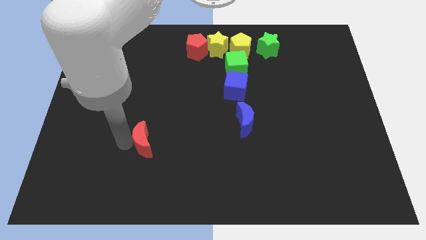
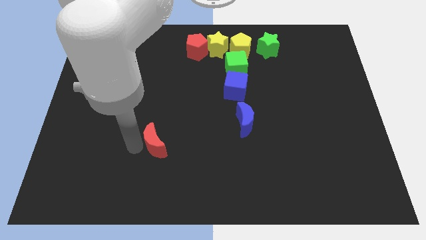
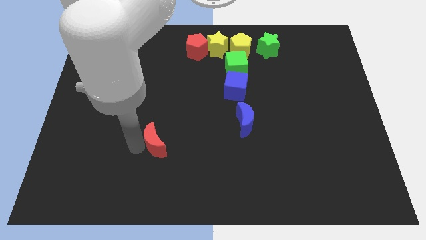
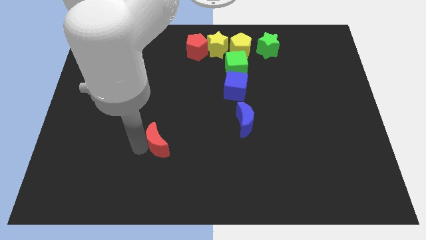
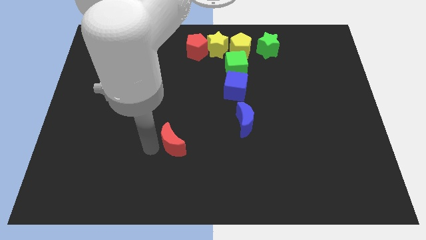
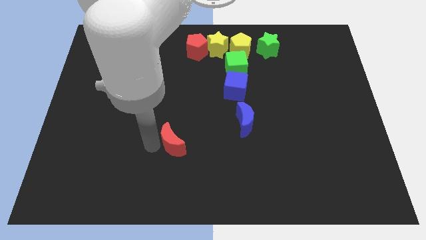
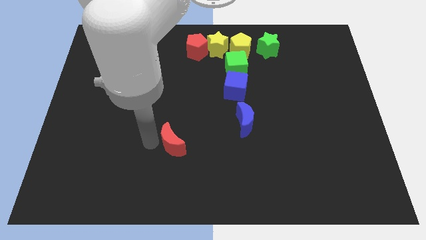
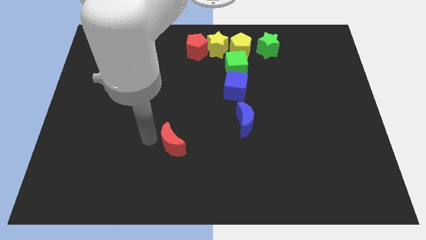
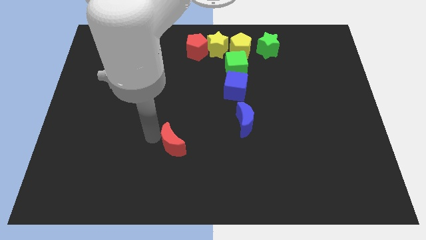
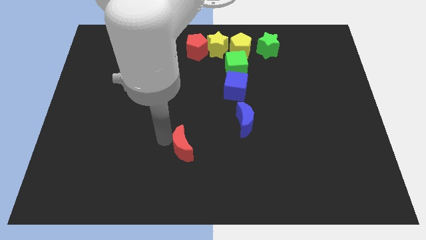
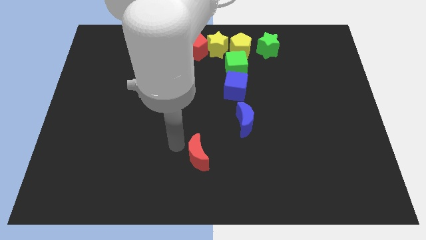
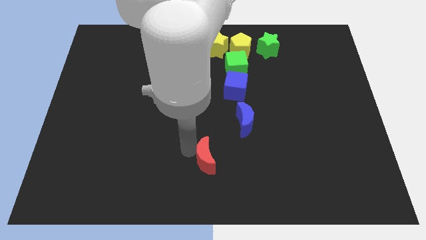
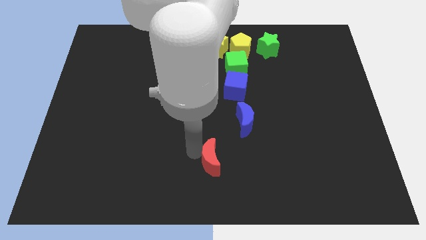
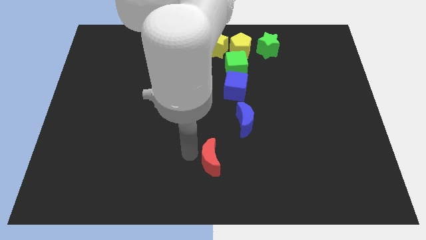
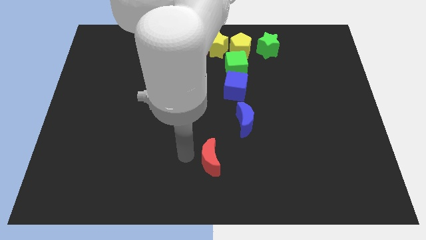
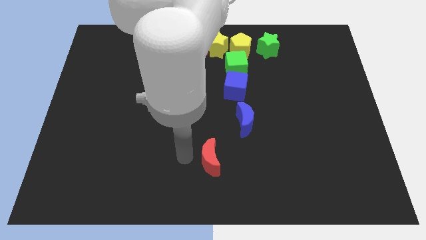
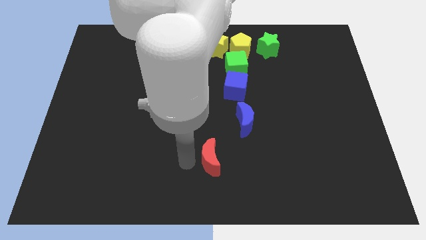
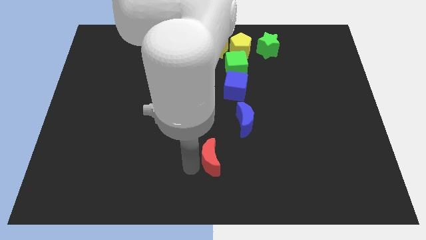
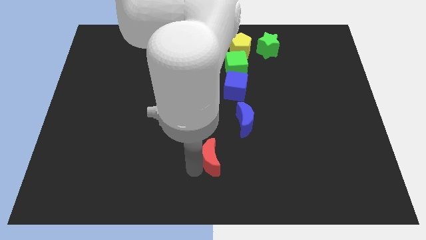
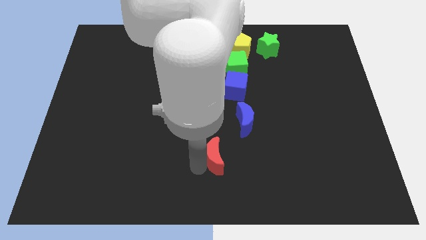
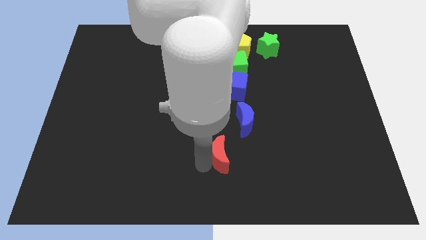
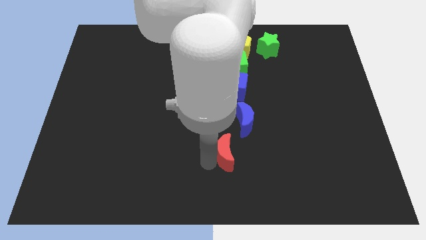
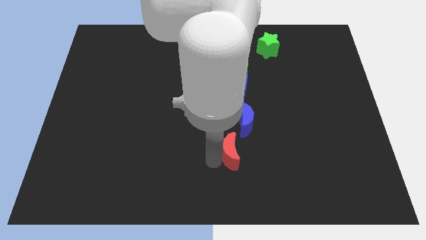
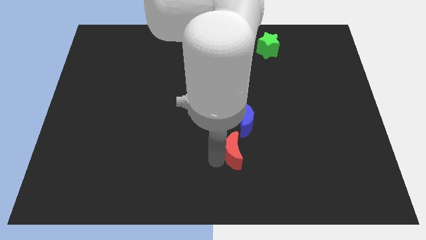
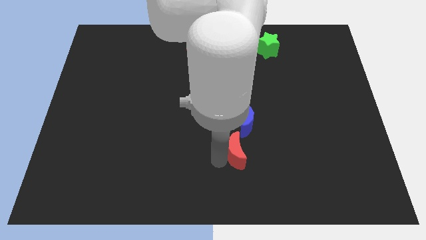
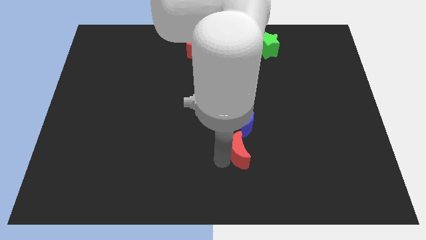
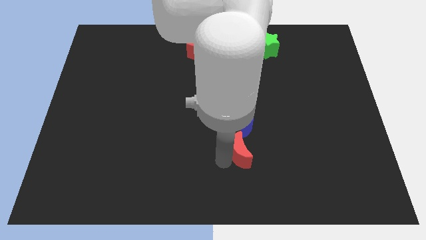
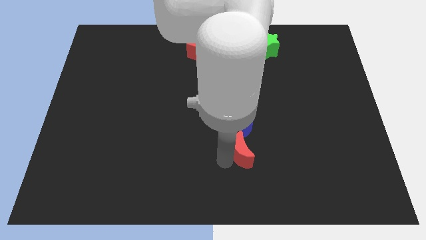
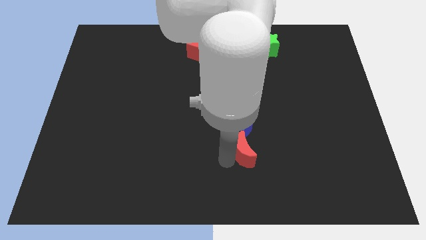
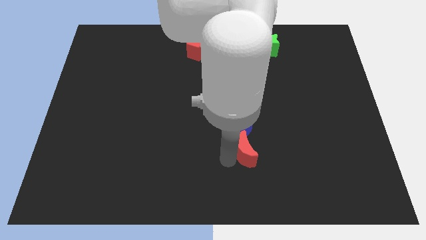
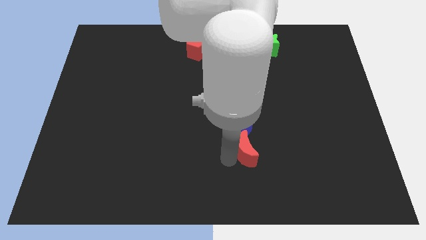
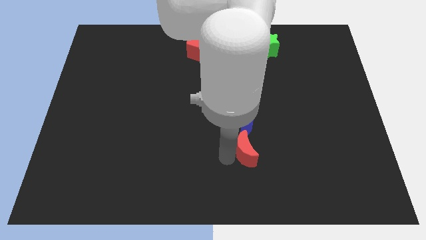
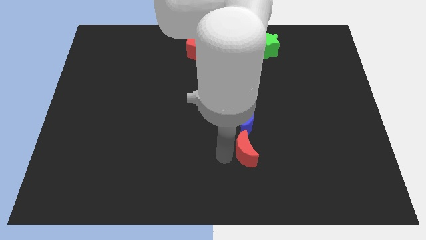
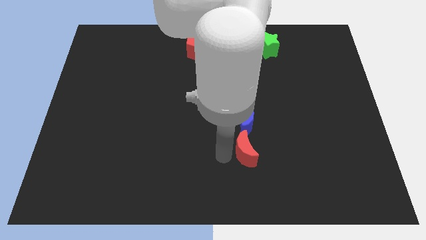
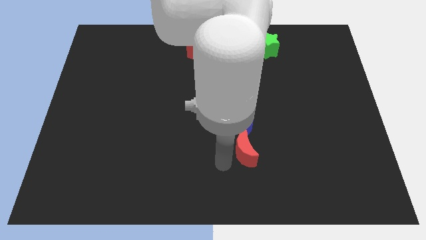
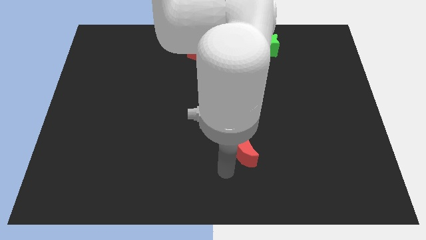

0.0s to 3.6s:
move red moon below to blue moon

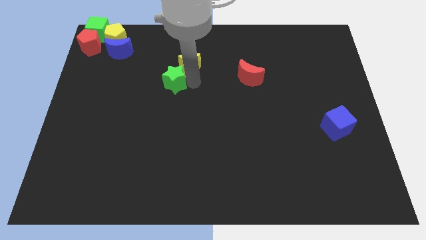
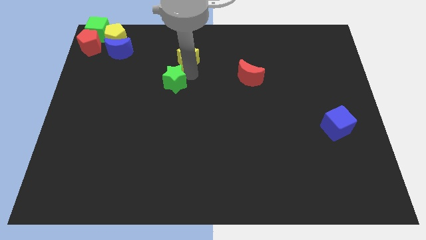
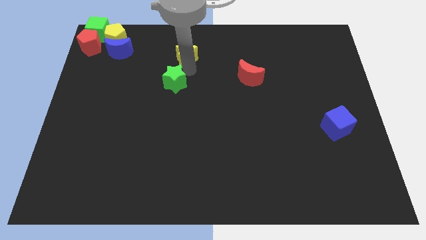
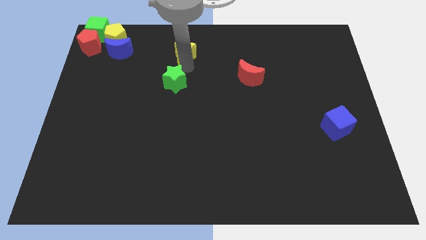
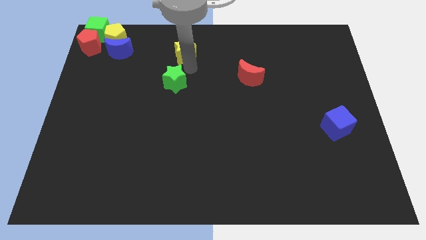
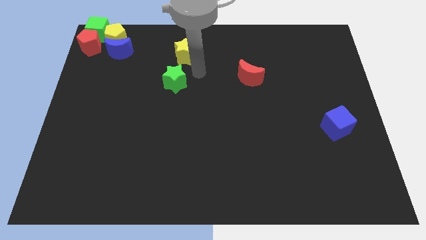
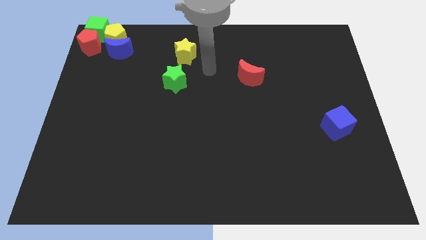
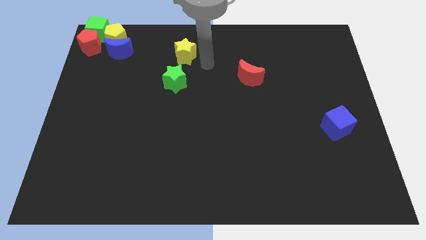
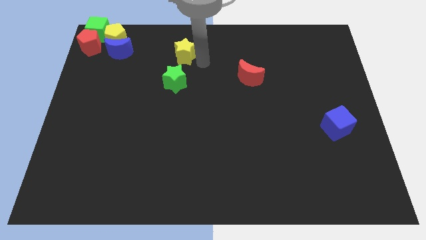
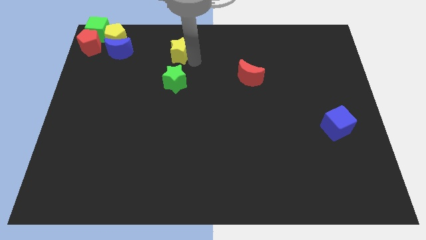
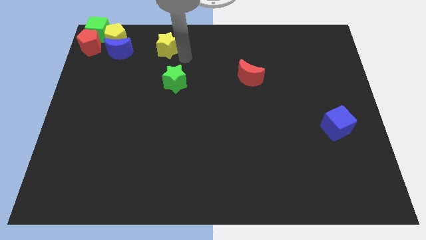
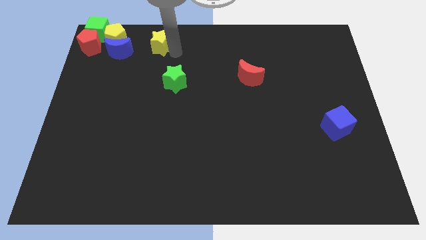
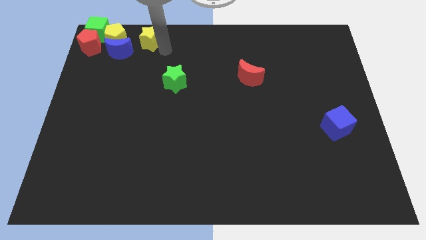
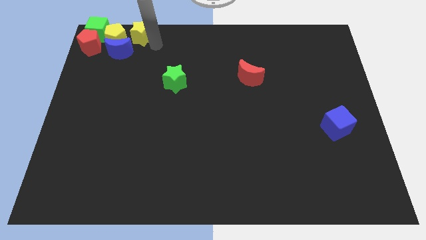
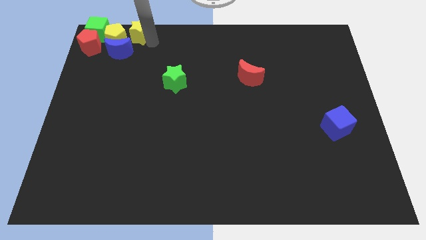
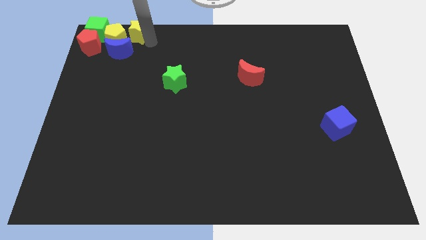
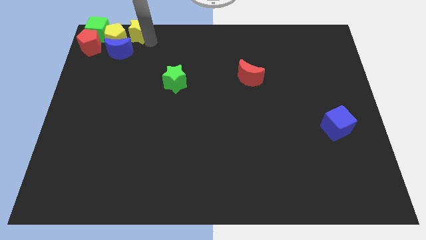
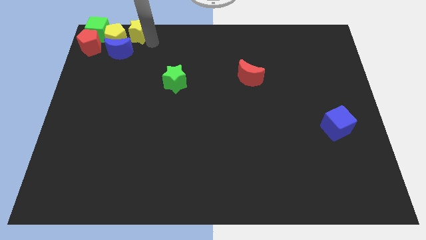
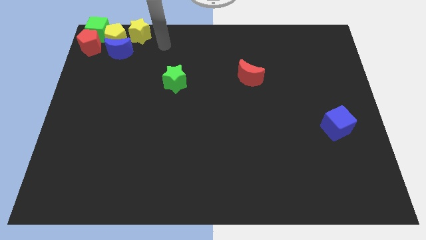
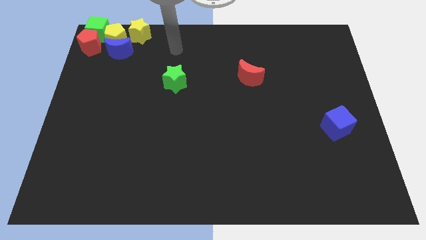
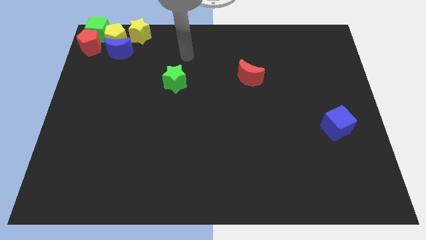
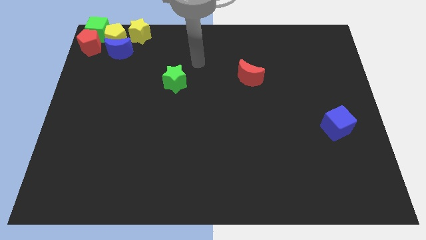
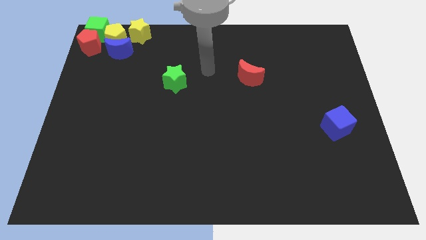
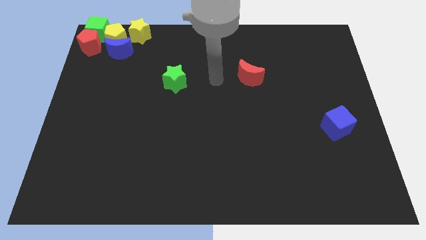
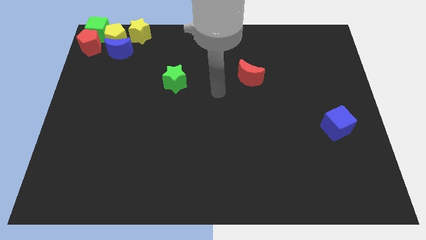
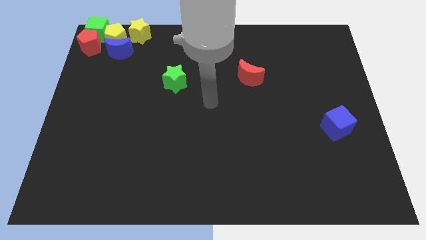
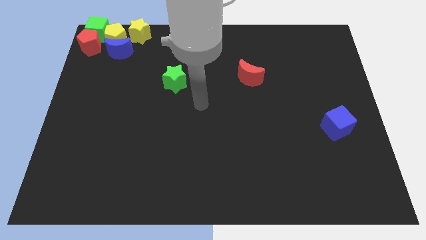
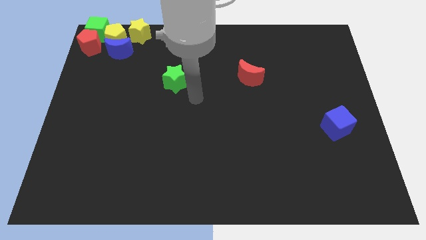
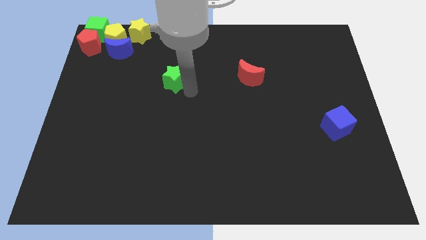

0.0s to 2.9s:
move yellow star right to the yellow pentagon

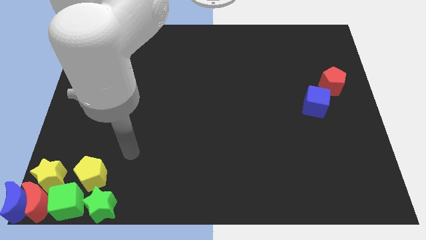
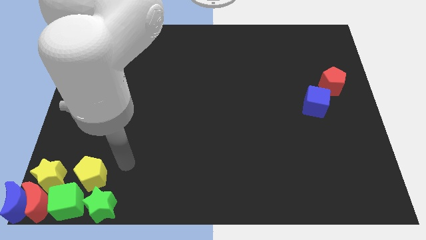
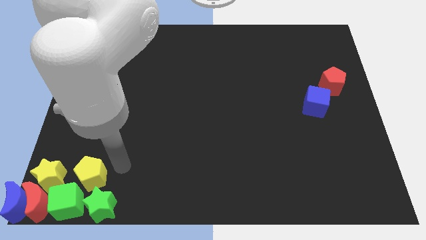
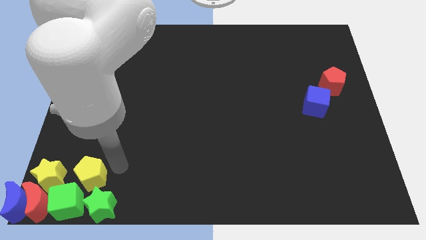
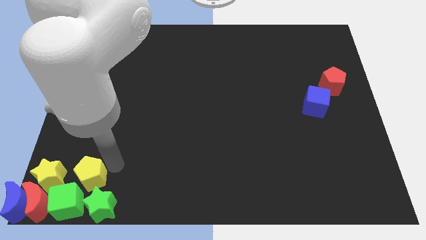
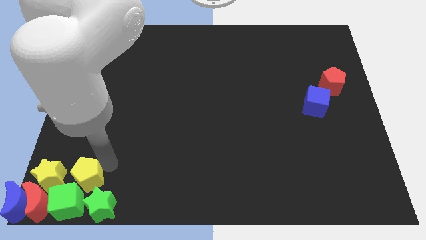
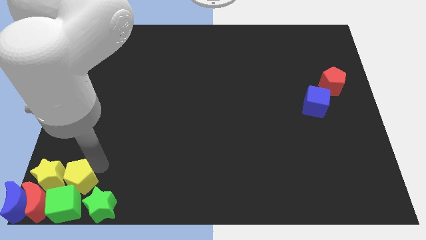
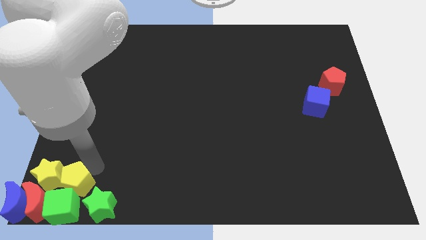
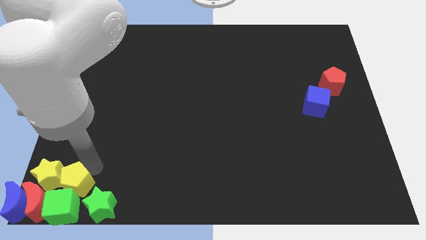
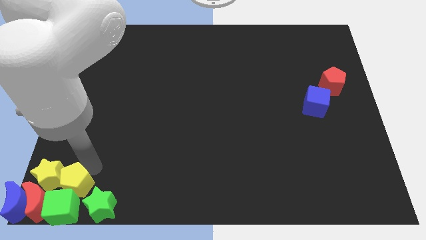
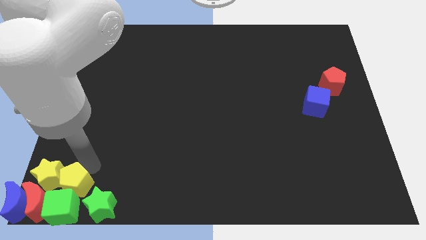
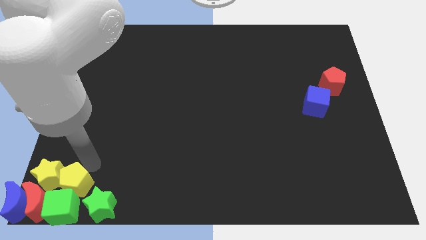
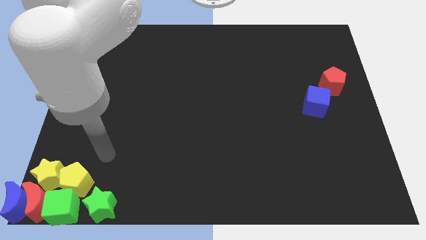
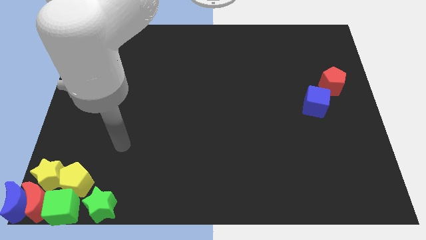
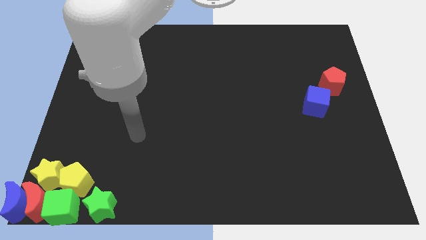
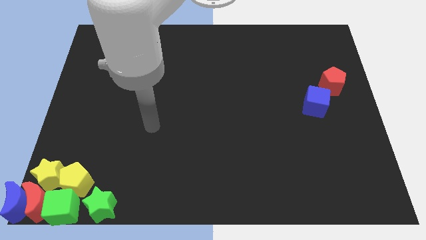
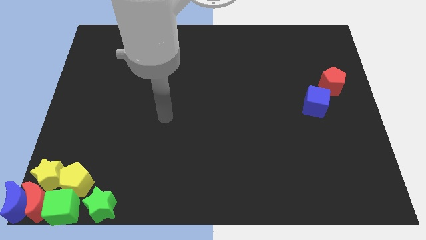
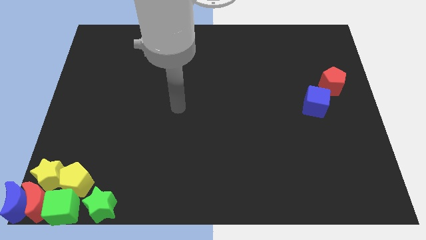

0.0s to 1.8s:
push the yellow pentagon into the green cube

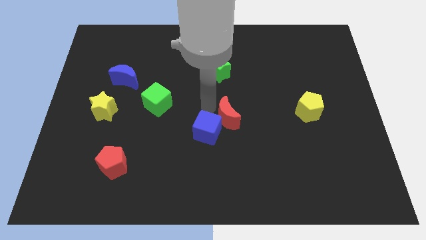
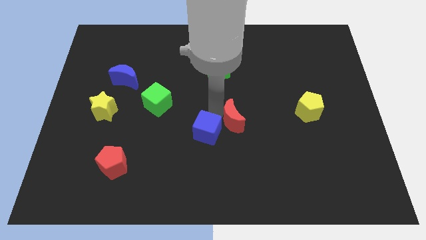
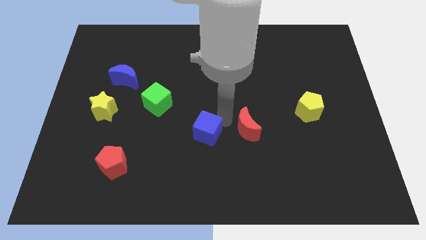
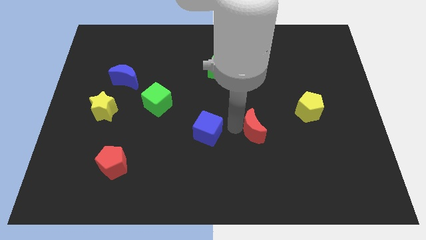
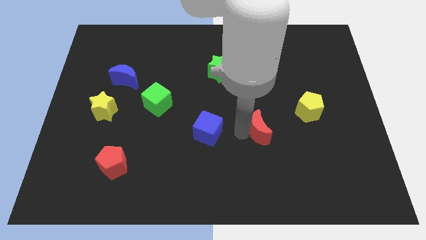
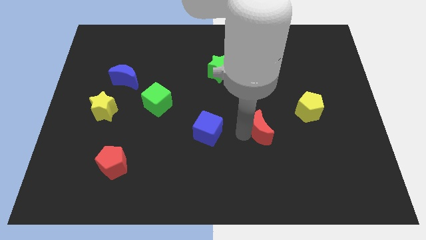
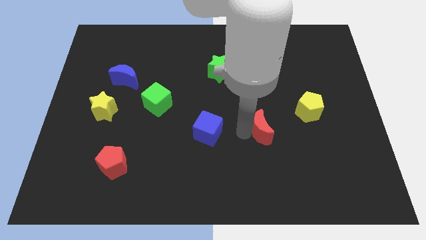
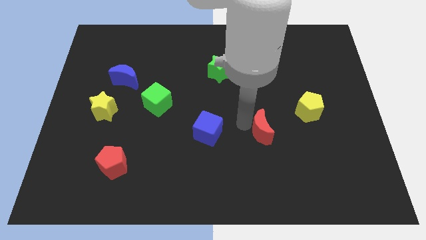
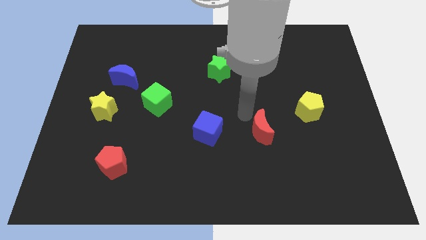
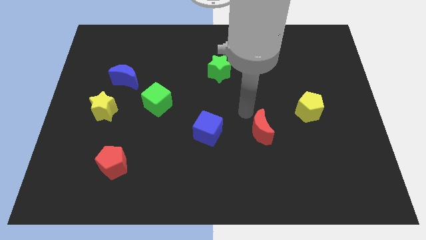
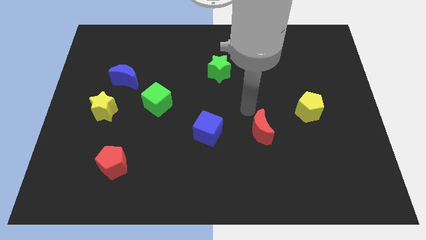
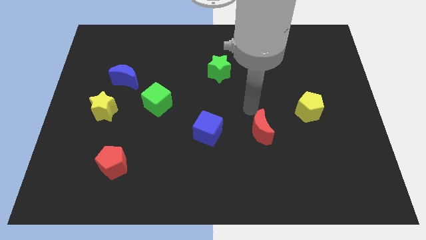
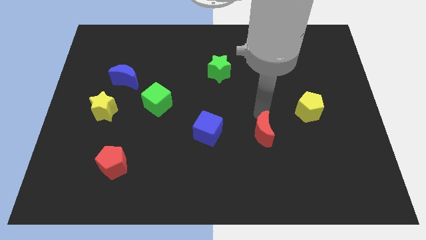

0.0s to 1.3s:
separate the red moon from the blue cube
